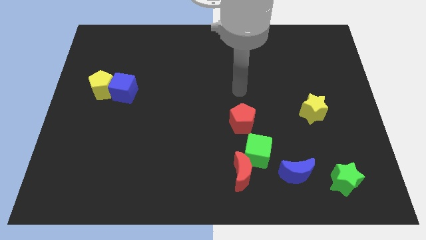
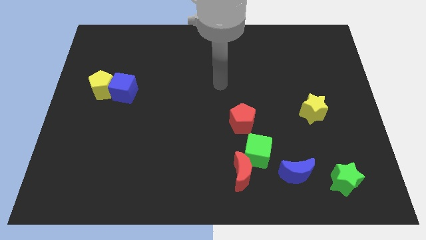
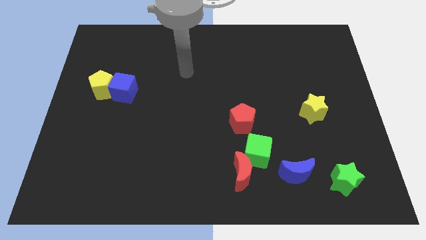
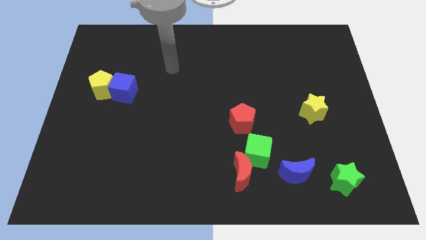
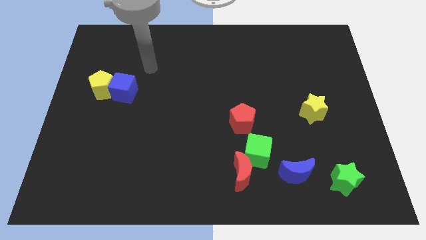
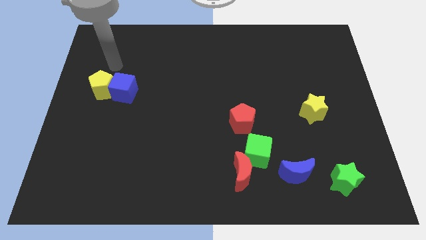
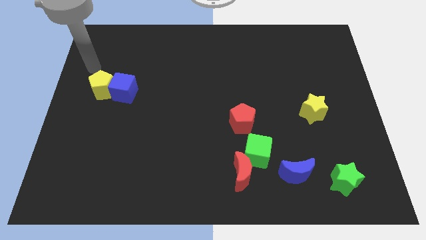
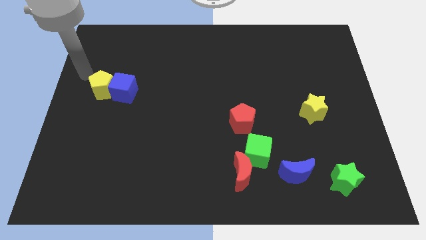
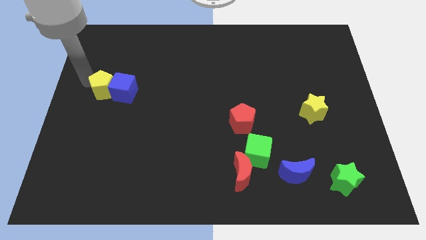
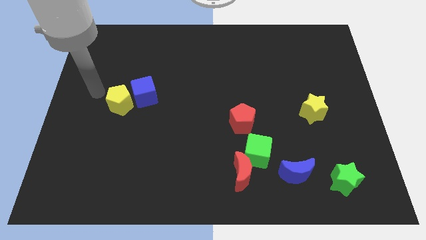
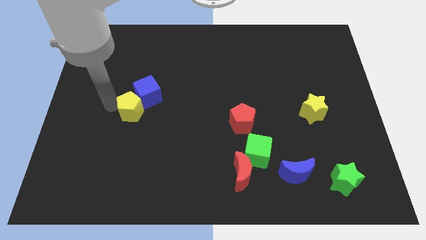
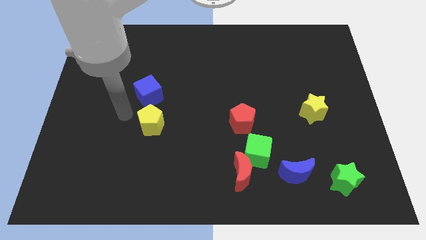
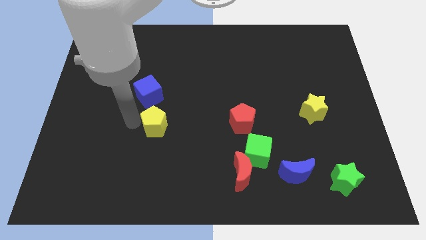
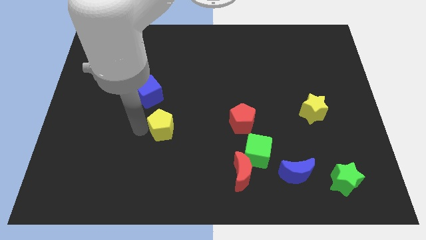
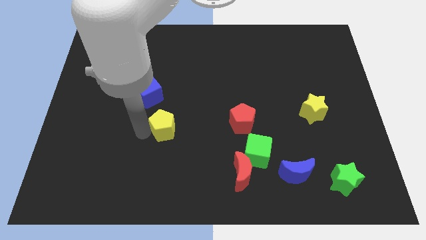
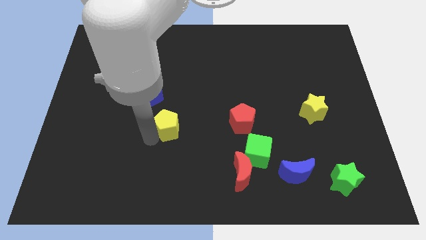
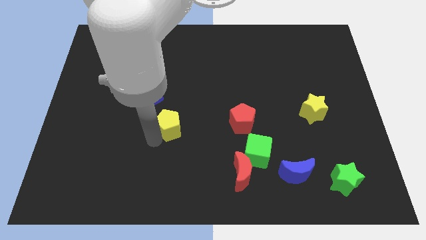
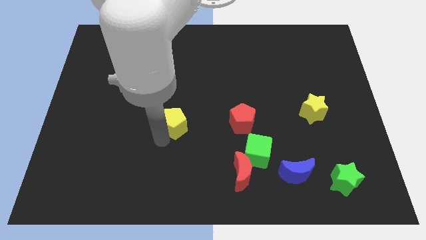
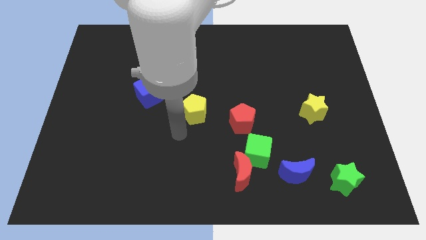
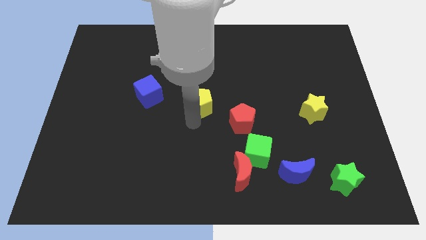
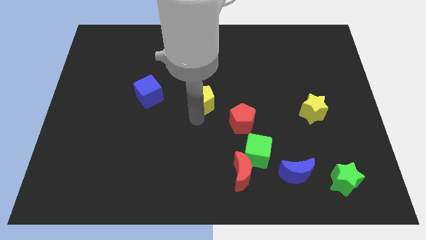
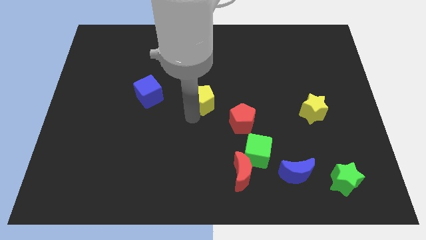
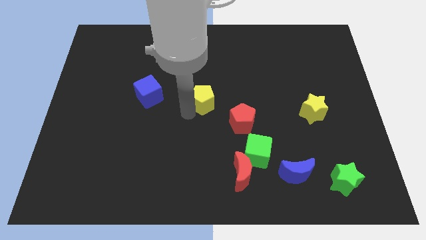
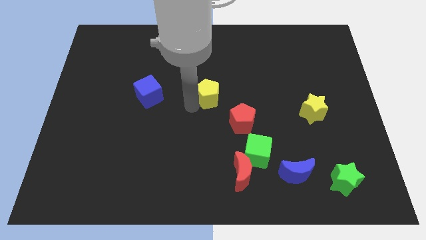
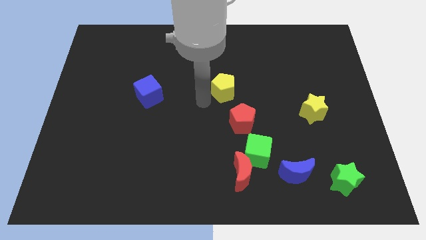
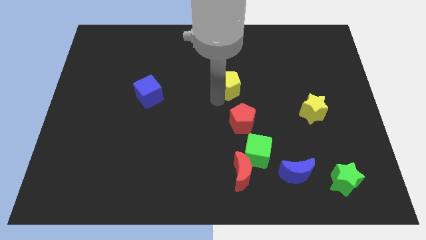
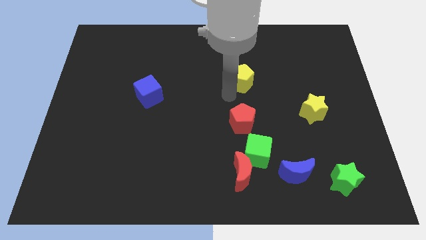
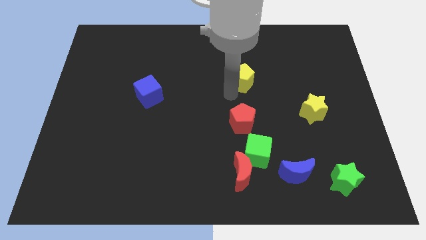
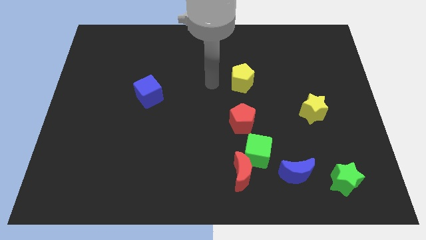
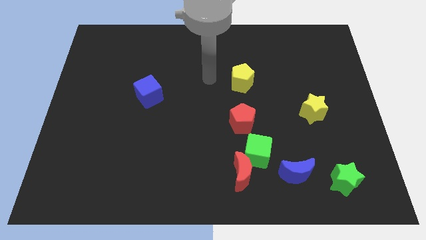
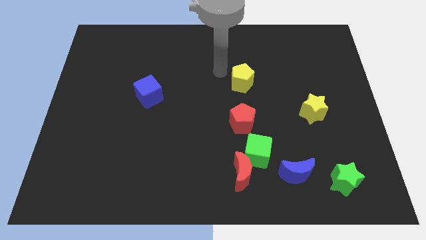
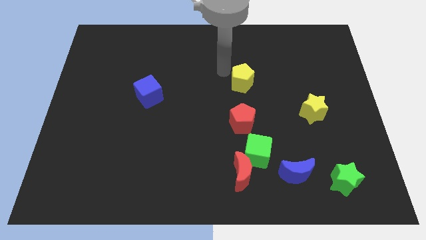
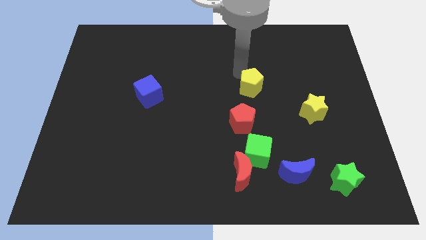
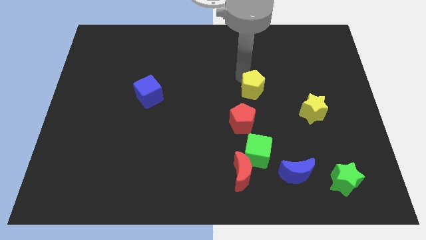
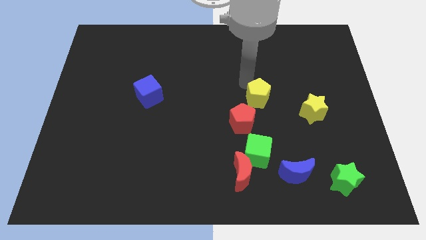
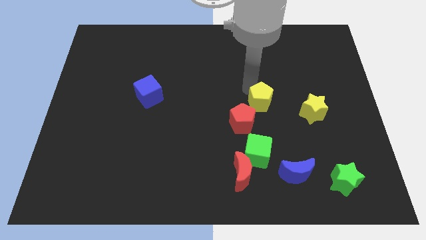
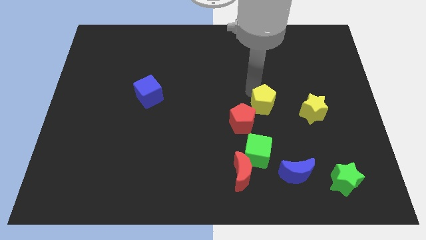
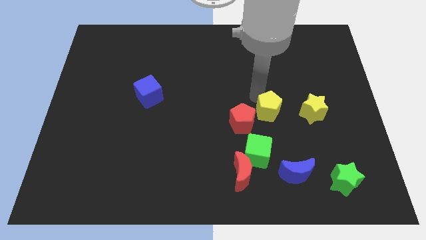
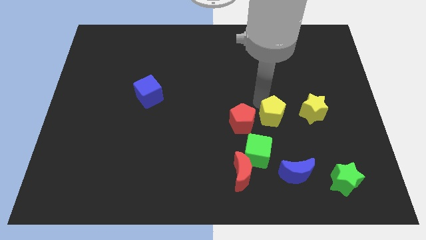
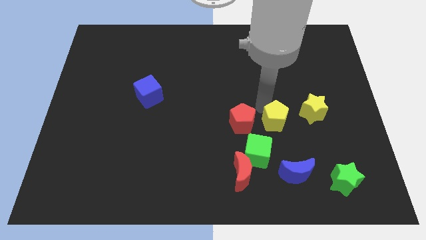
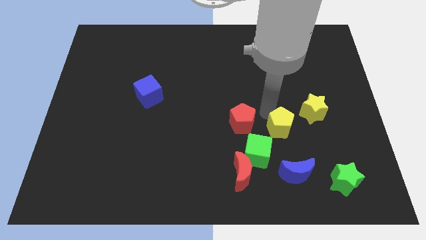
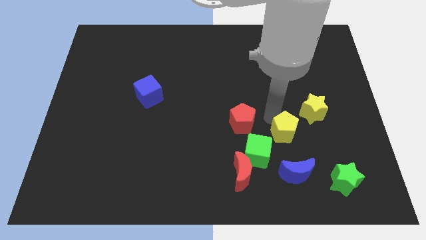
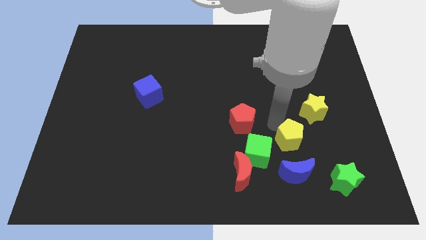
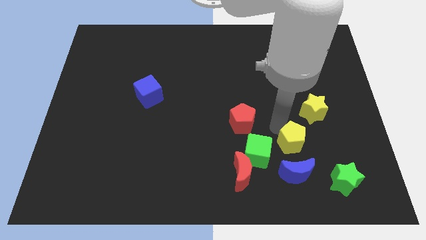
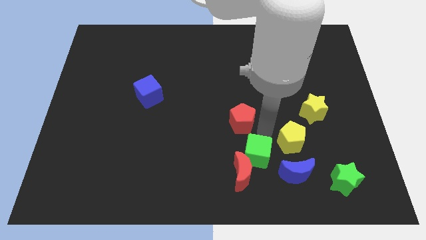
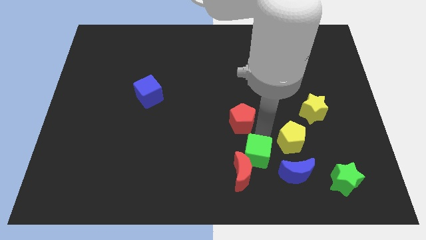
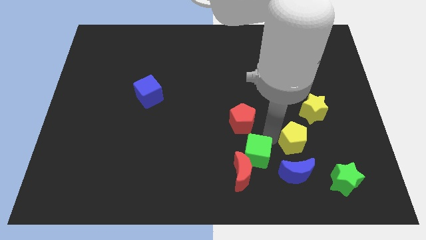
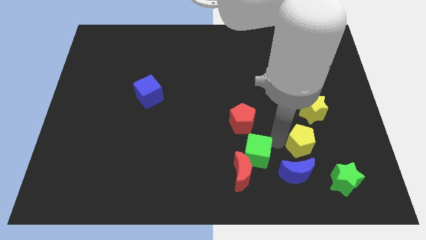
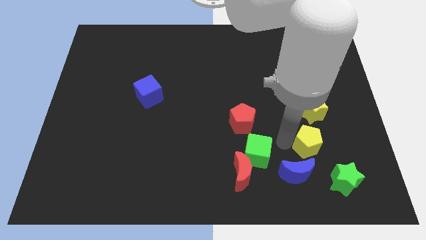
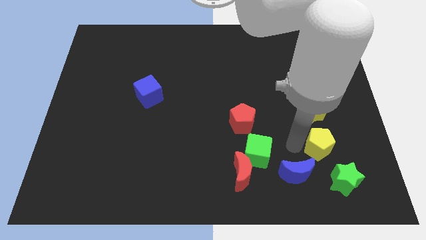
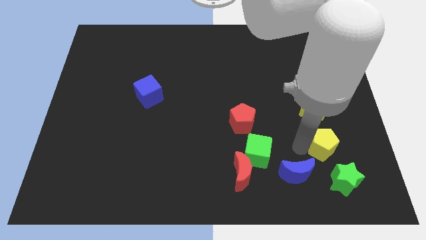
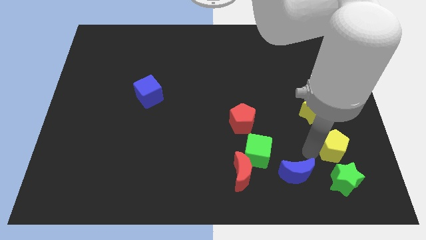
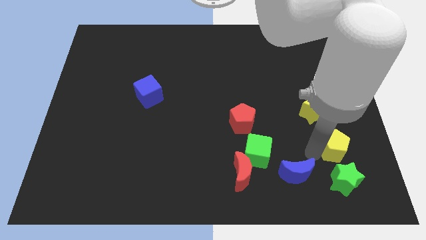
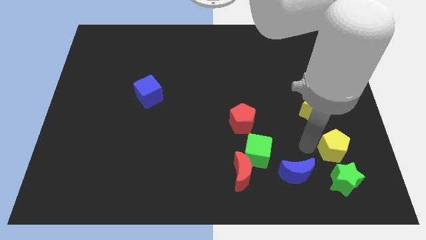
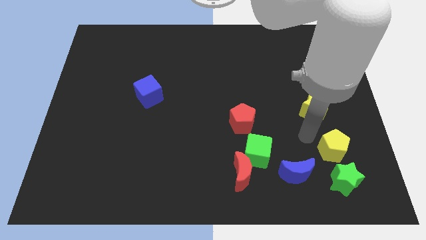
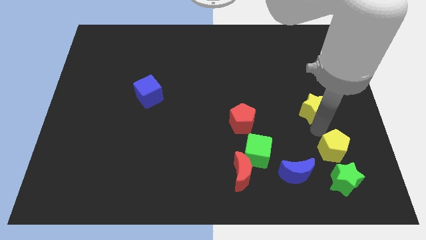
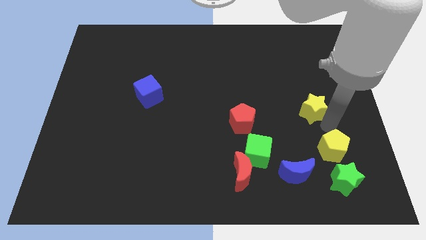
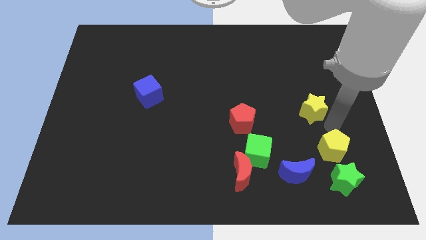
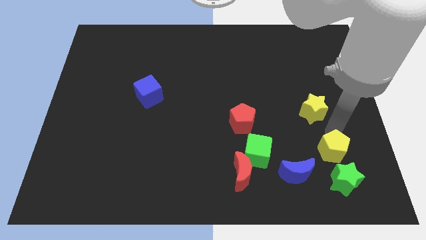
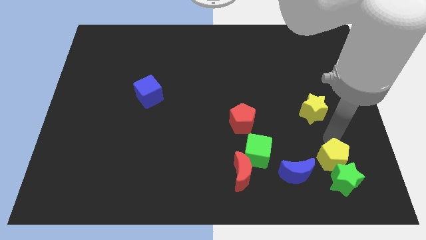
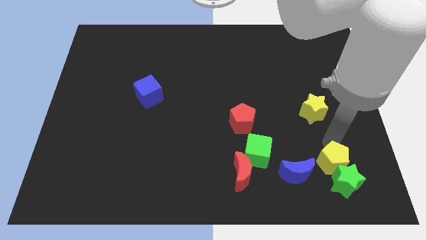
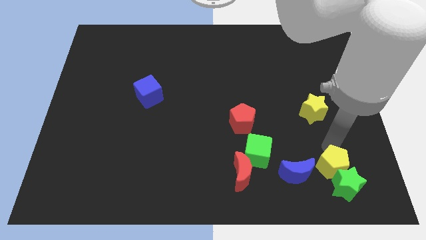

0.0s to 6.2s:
move the yellow pentagon towards the green star

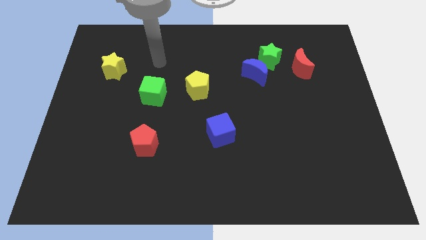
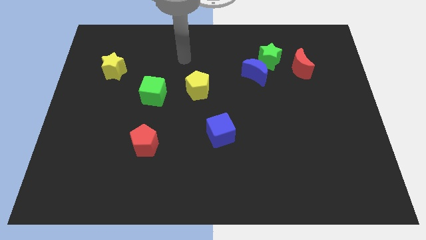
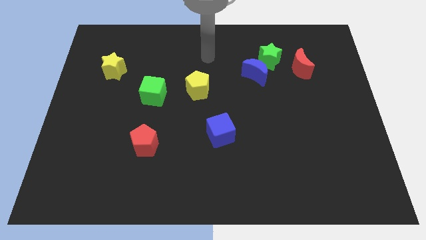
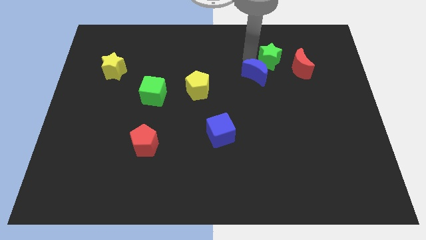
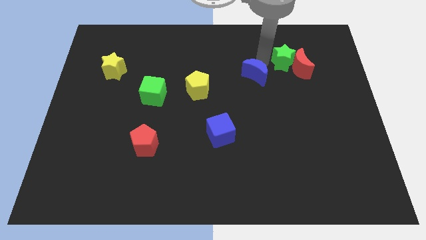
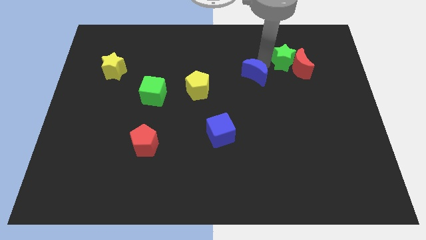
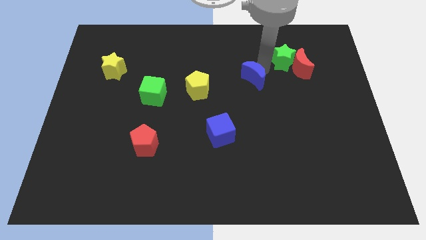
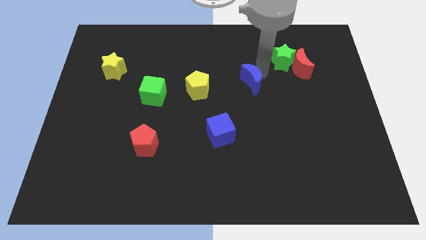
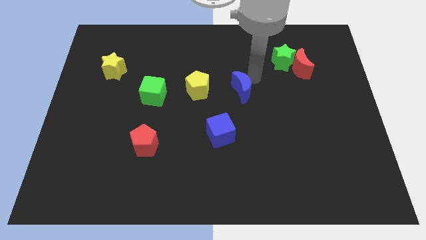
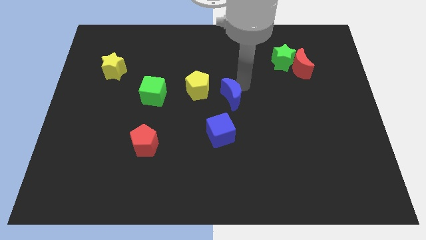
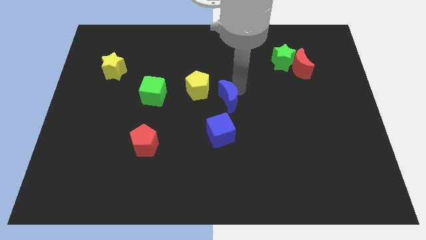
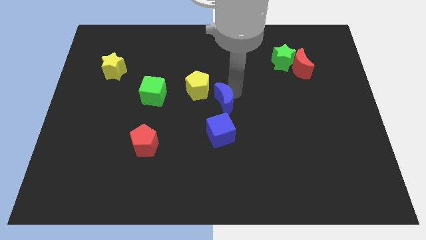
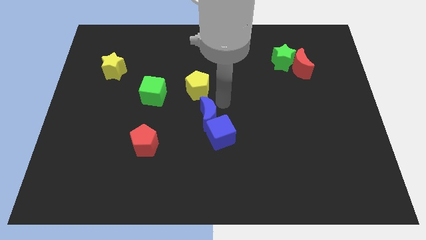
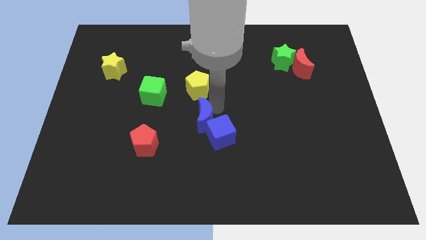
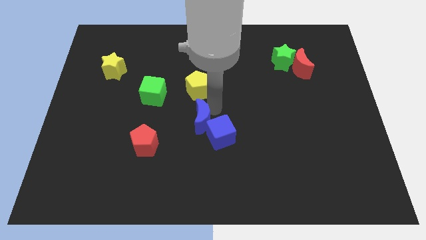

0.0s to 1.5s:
move the blue moon to the blue cube

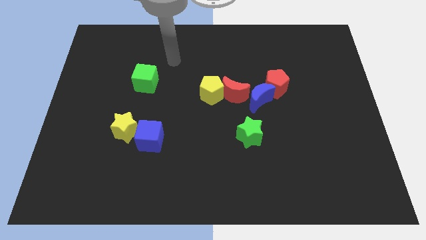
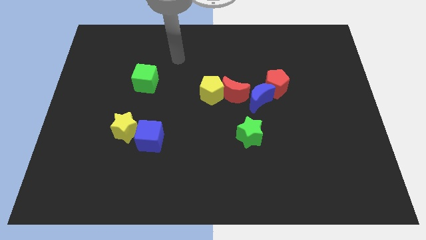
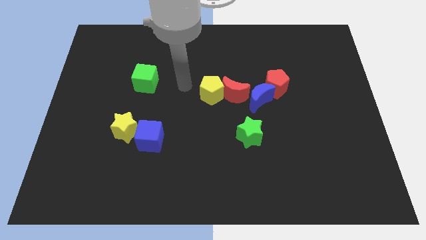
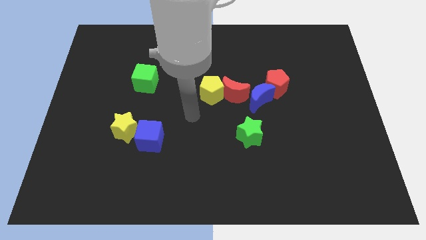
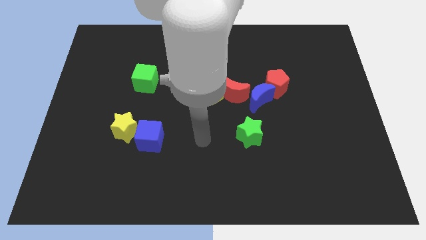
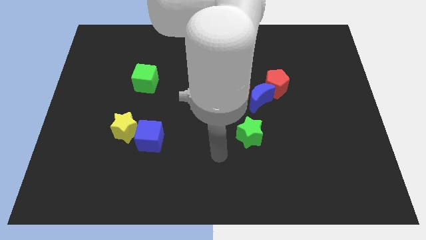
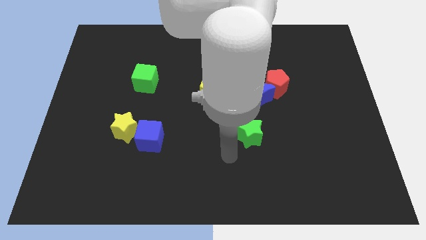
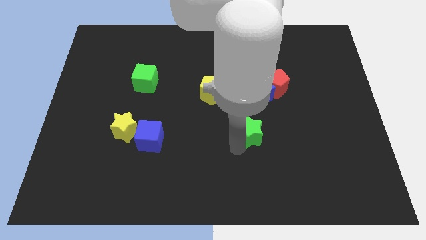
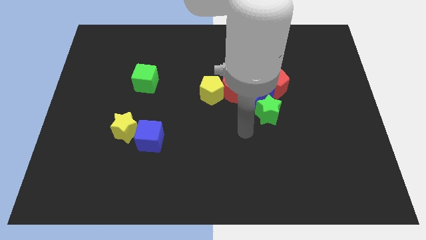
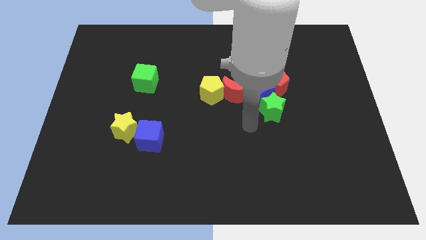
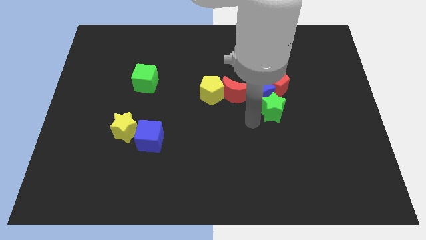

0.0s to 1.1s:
move the green star next to the blue moon
